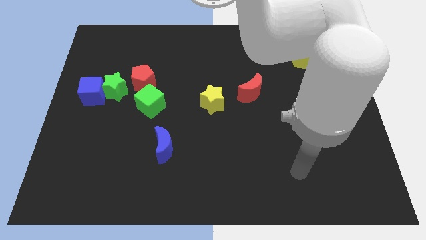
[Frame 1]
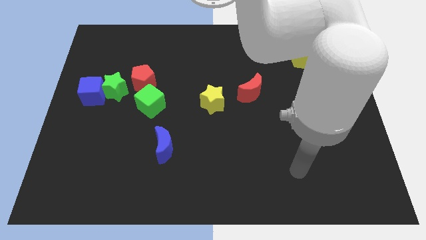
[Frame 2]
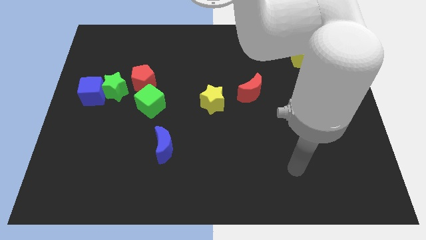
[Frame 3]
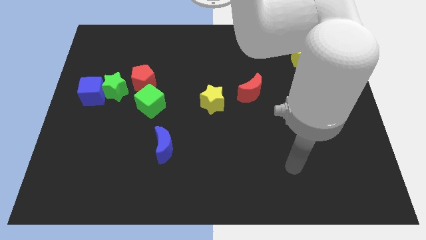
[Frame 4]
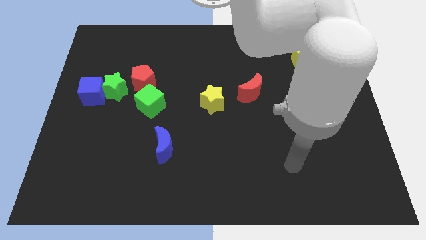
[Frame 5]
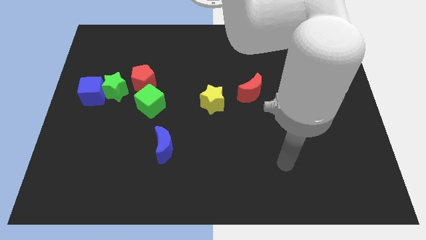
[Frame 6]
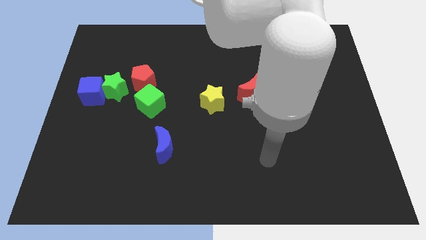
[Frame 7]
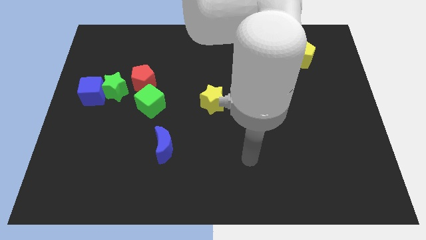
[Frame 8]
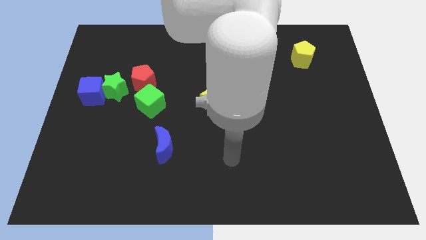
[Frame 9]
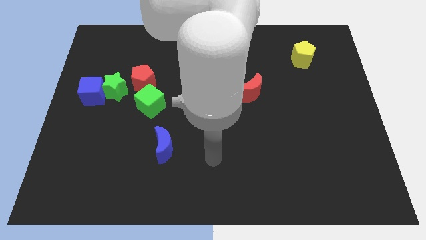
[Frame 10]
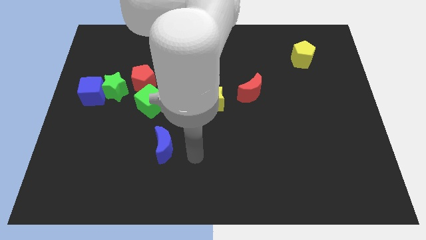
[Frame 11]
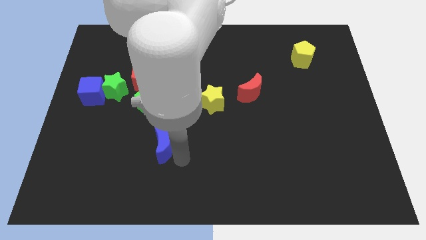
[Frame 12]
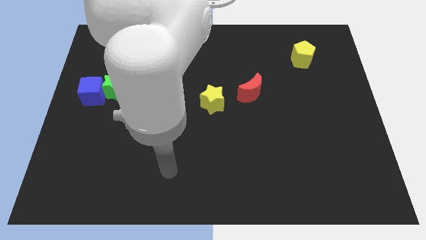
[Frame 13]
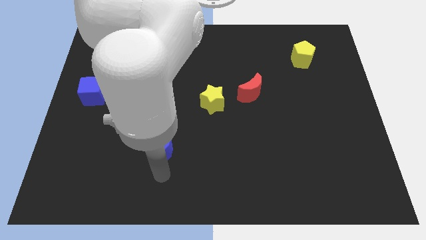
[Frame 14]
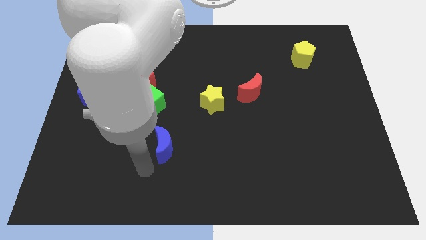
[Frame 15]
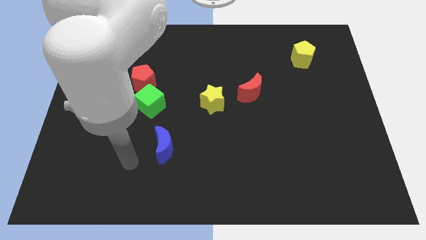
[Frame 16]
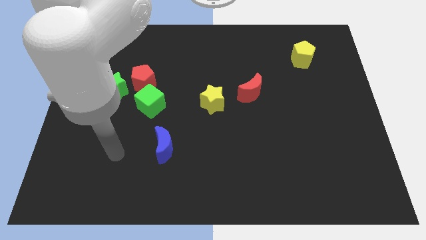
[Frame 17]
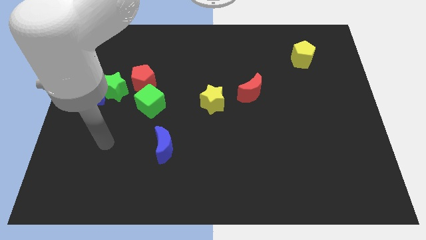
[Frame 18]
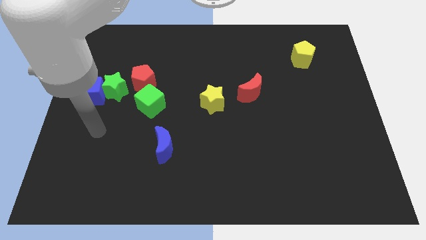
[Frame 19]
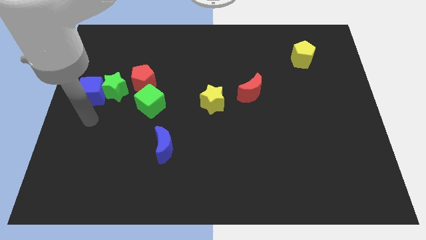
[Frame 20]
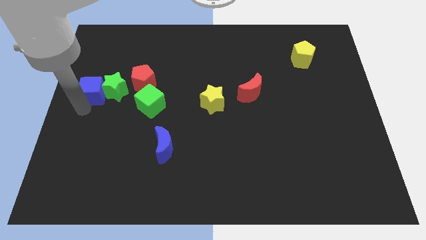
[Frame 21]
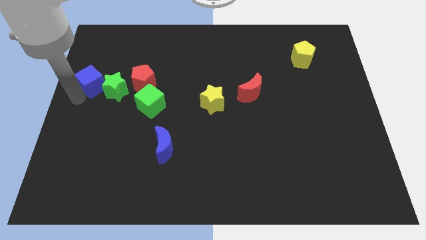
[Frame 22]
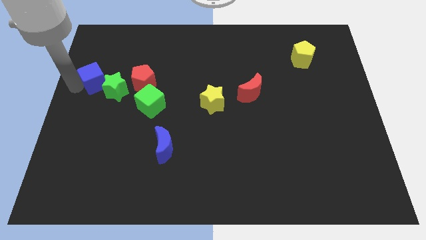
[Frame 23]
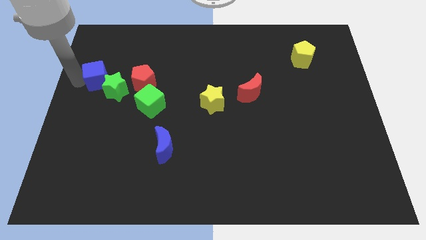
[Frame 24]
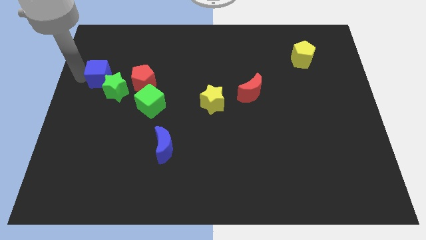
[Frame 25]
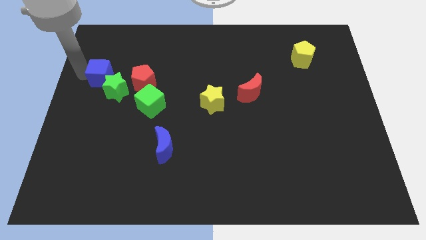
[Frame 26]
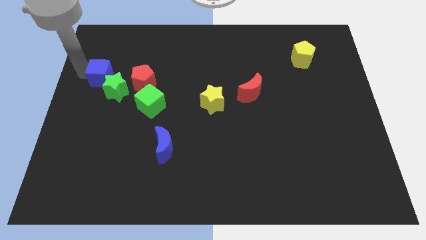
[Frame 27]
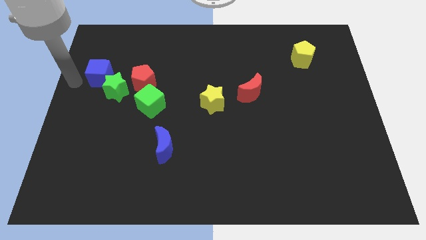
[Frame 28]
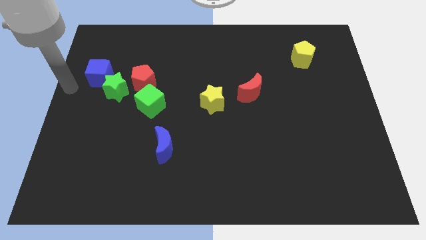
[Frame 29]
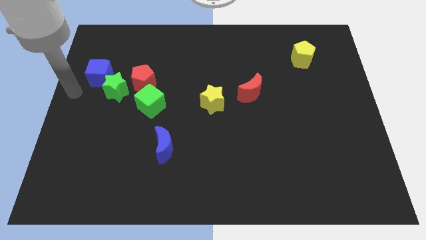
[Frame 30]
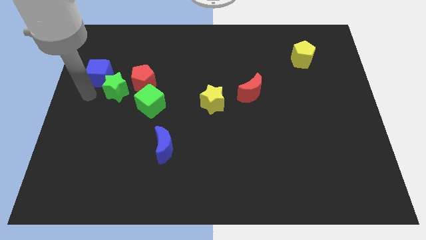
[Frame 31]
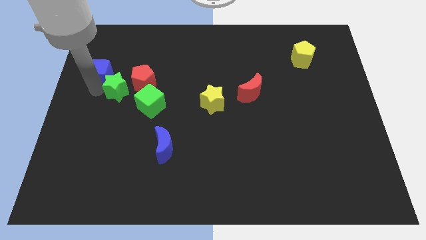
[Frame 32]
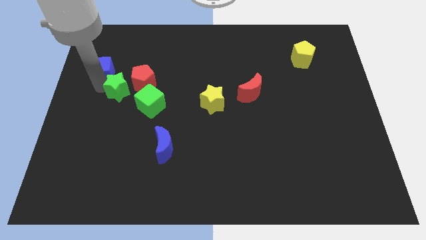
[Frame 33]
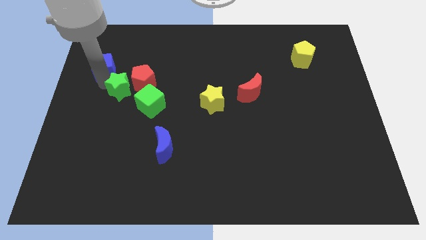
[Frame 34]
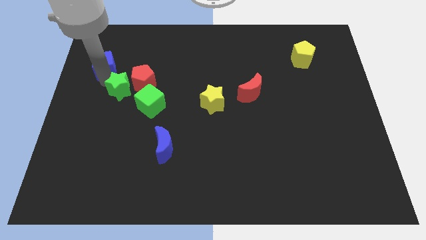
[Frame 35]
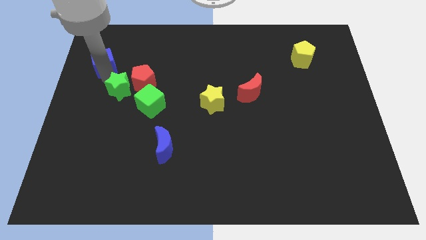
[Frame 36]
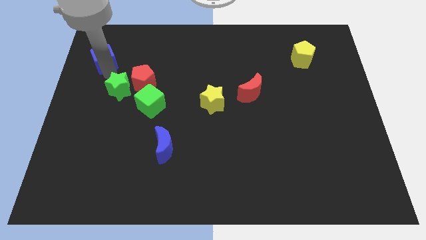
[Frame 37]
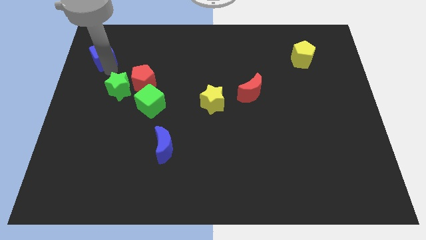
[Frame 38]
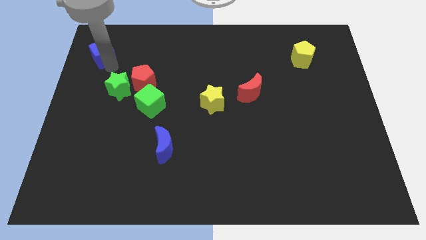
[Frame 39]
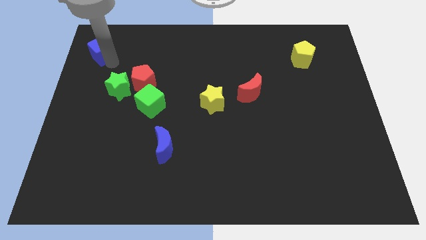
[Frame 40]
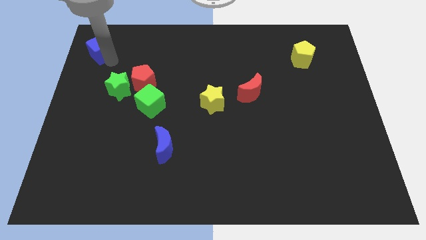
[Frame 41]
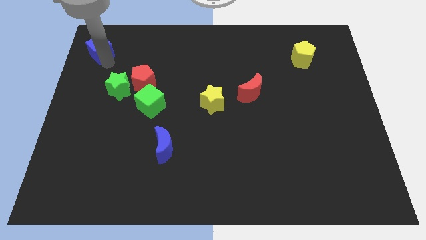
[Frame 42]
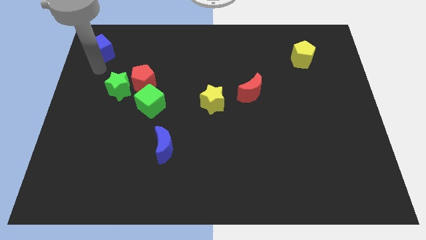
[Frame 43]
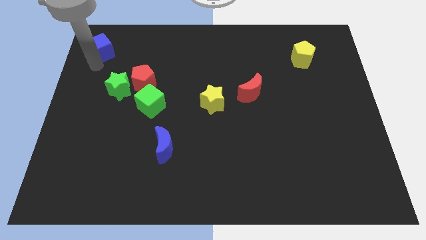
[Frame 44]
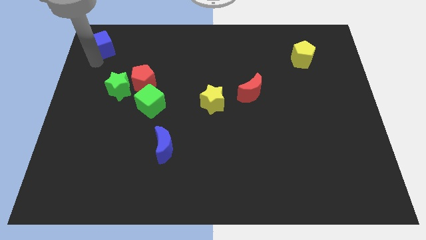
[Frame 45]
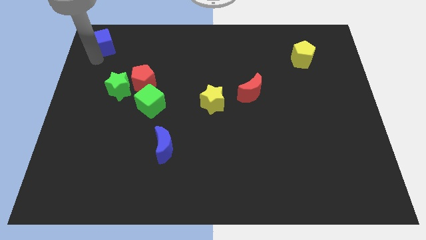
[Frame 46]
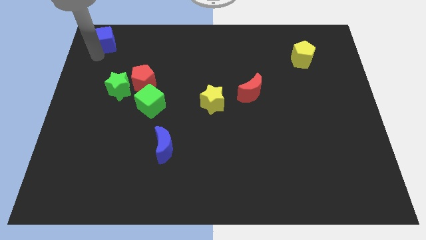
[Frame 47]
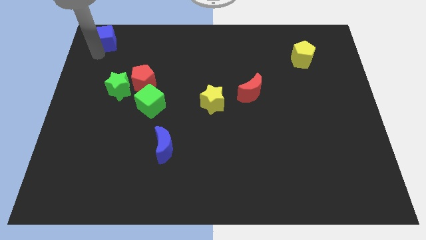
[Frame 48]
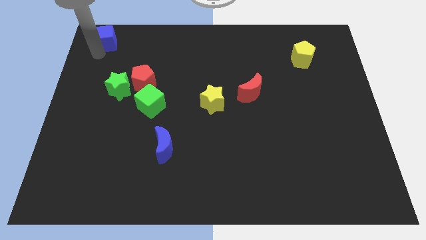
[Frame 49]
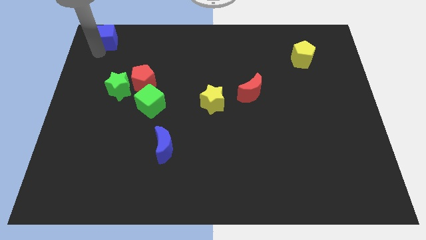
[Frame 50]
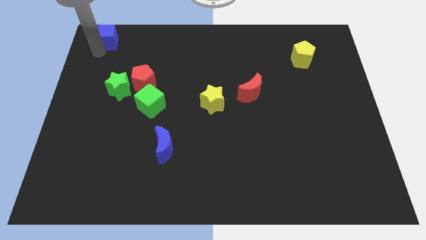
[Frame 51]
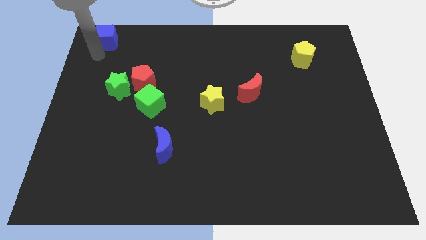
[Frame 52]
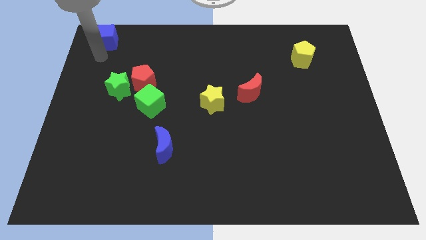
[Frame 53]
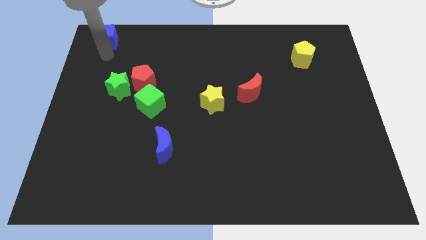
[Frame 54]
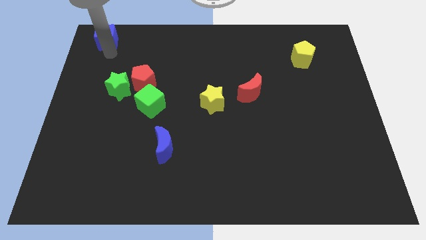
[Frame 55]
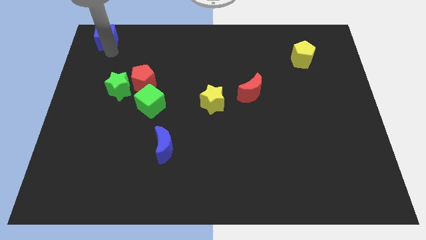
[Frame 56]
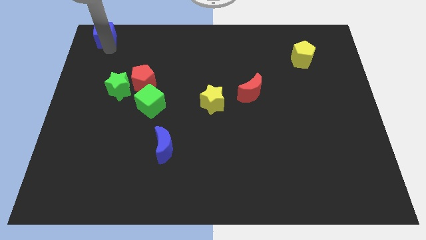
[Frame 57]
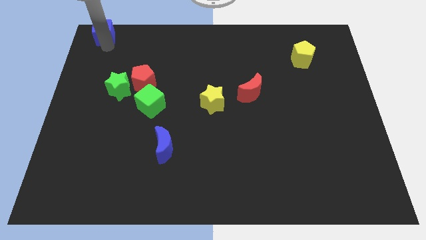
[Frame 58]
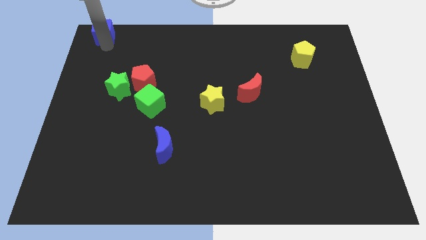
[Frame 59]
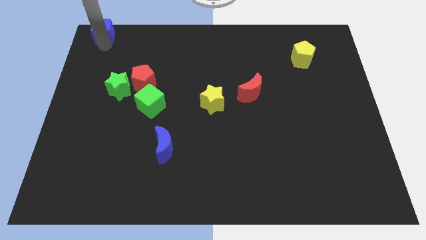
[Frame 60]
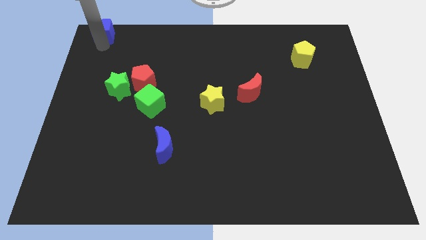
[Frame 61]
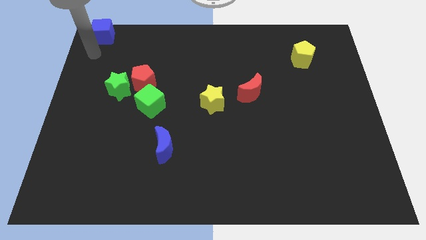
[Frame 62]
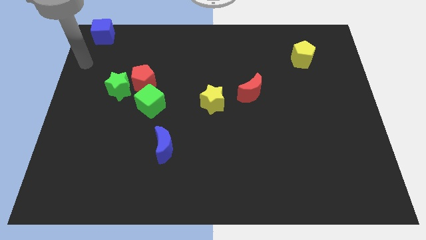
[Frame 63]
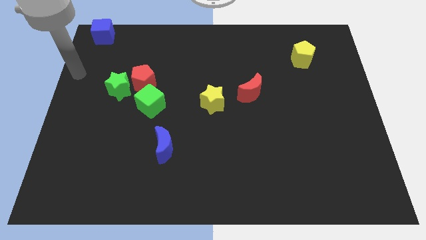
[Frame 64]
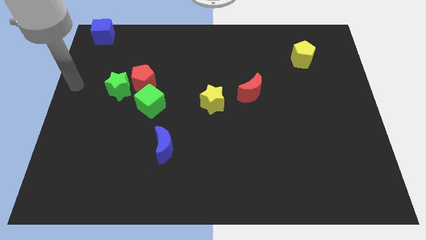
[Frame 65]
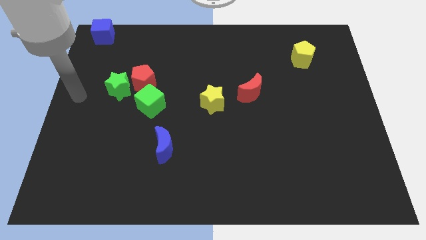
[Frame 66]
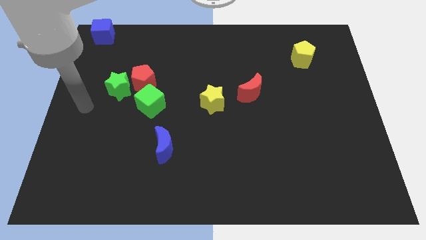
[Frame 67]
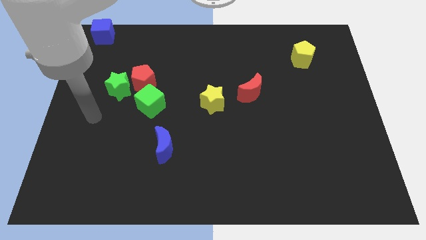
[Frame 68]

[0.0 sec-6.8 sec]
move the blue cube to the top of the board

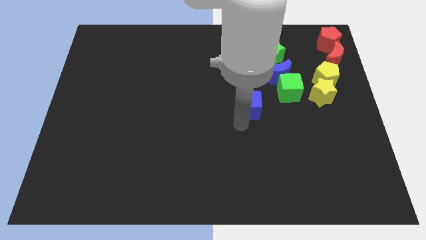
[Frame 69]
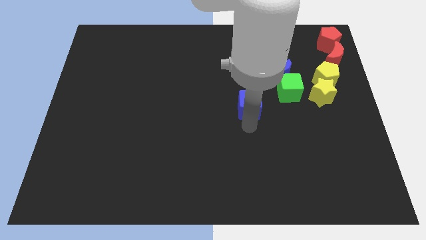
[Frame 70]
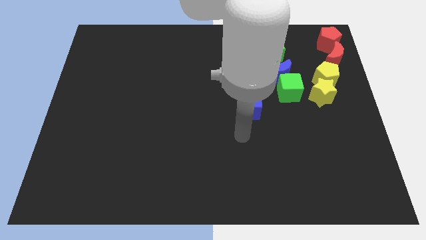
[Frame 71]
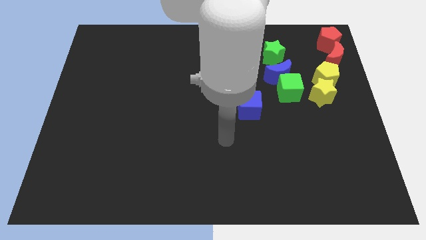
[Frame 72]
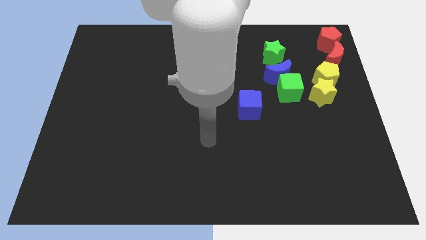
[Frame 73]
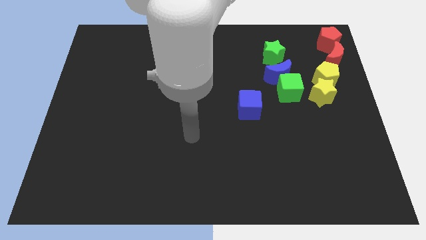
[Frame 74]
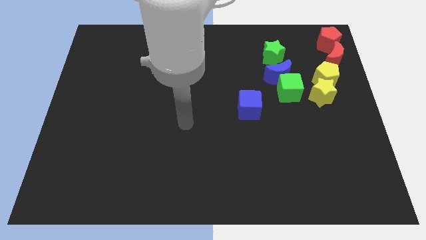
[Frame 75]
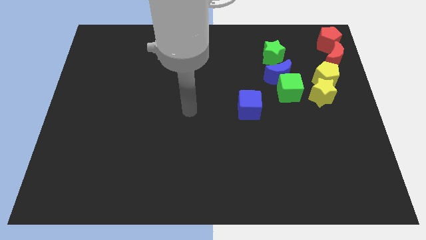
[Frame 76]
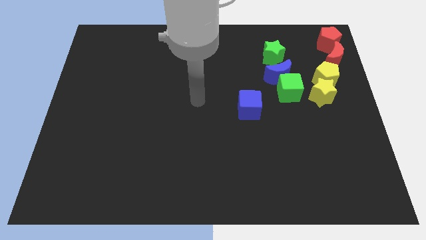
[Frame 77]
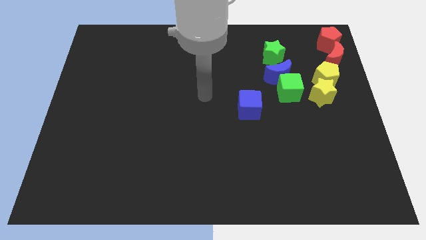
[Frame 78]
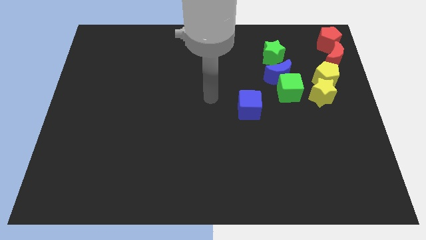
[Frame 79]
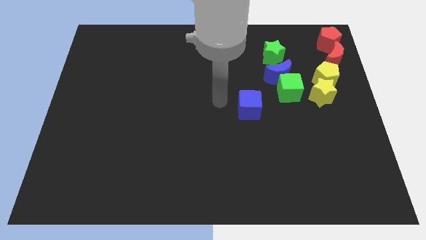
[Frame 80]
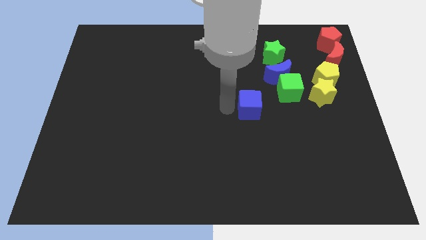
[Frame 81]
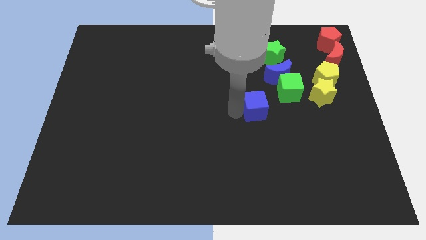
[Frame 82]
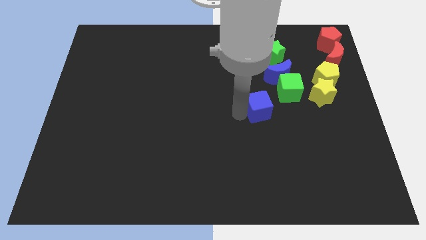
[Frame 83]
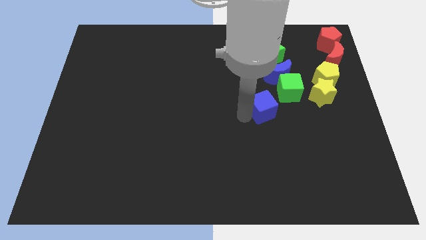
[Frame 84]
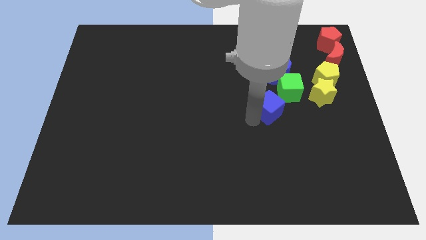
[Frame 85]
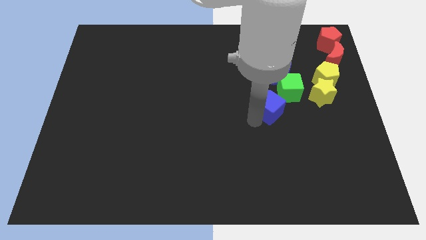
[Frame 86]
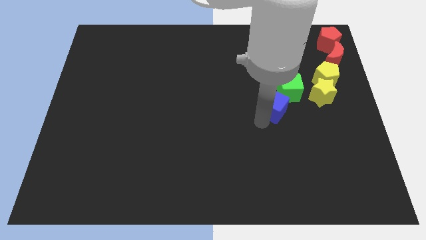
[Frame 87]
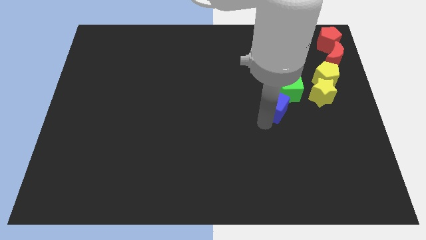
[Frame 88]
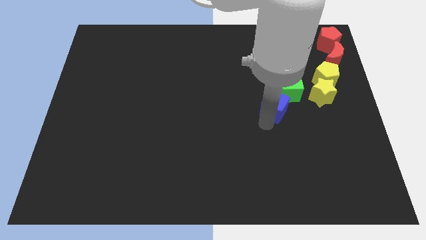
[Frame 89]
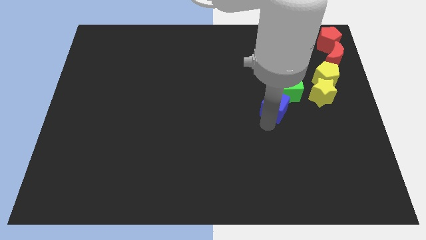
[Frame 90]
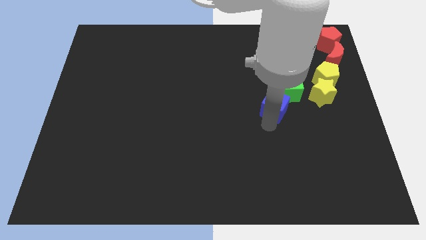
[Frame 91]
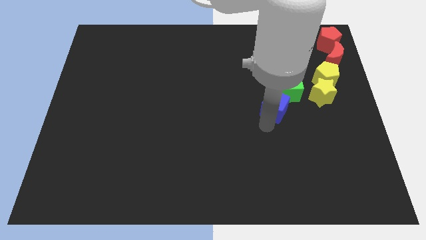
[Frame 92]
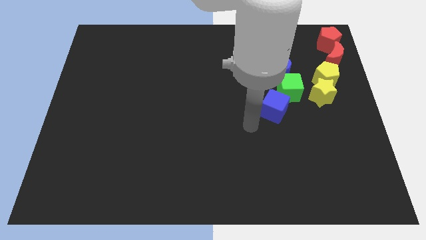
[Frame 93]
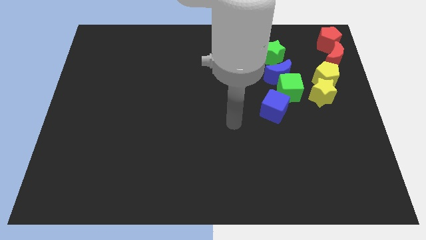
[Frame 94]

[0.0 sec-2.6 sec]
put the blue cube at the bottom left of the green cube
